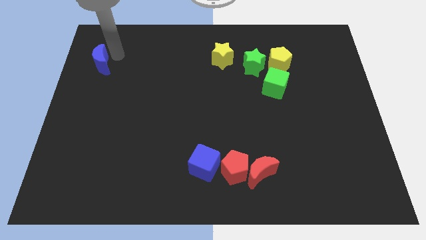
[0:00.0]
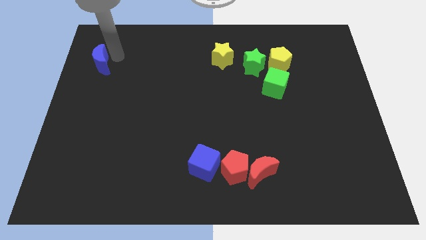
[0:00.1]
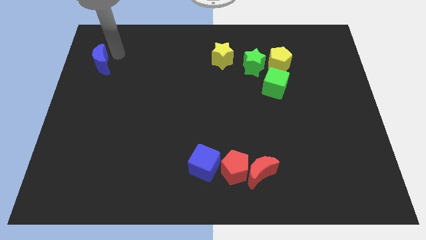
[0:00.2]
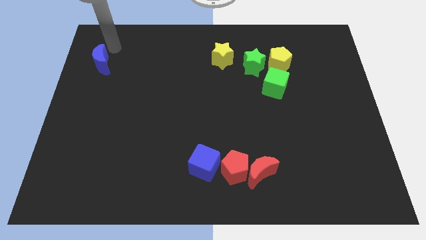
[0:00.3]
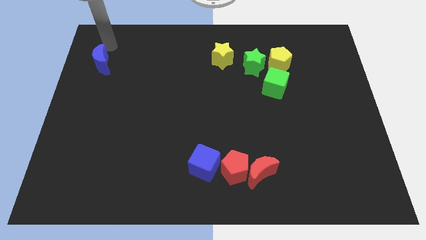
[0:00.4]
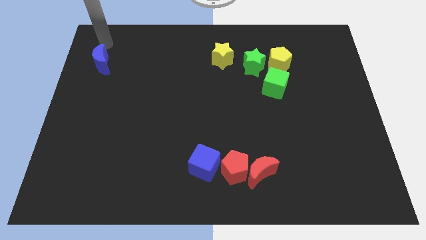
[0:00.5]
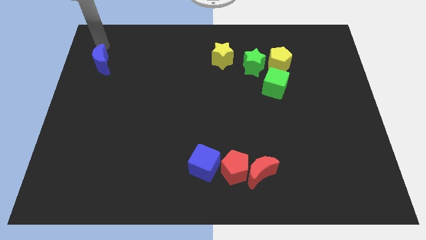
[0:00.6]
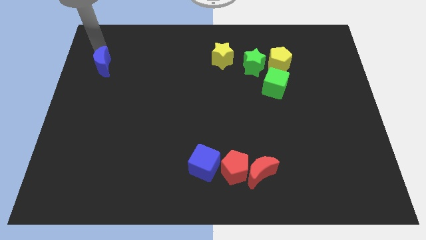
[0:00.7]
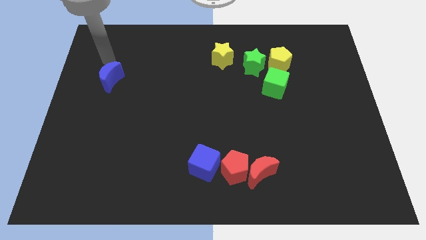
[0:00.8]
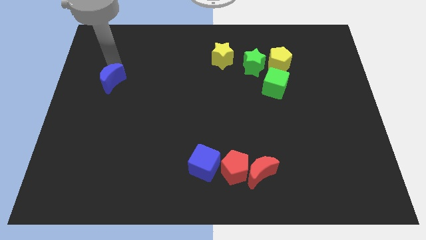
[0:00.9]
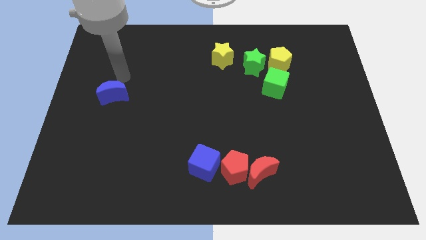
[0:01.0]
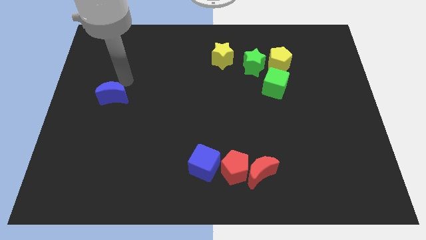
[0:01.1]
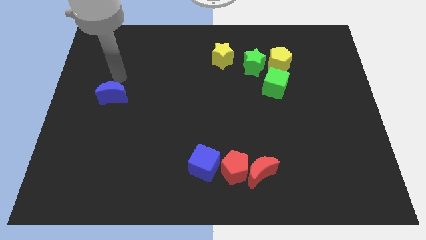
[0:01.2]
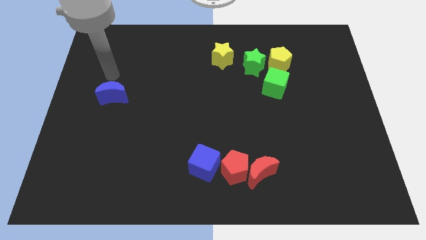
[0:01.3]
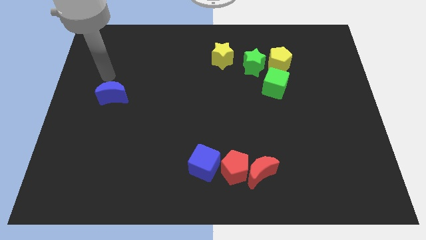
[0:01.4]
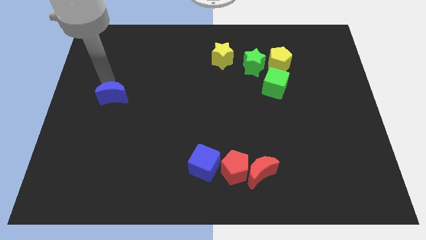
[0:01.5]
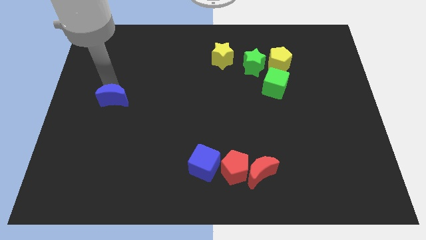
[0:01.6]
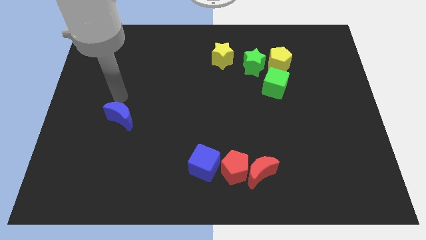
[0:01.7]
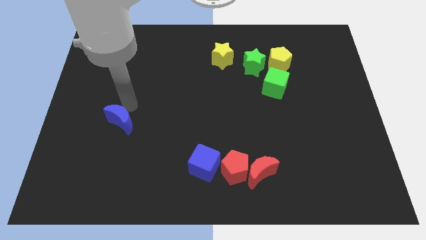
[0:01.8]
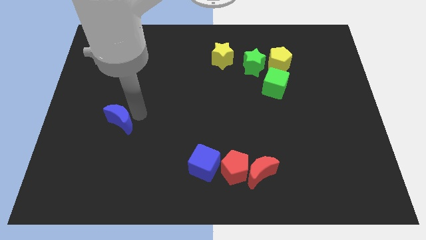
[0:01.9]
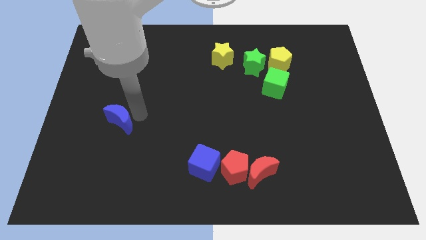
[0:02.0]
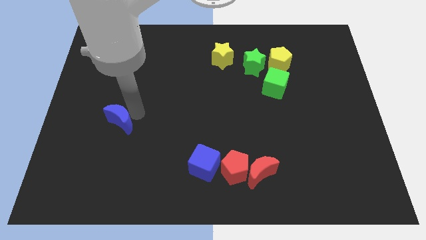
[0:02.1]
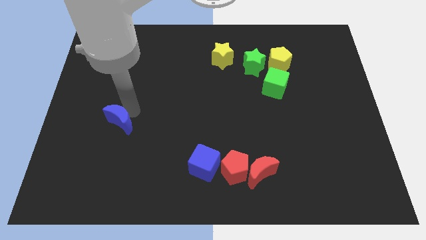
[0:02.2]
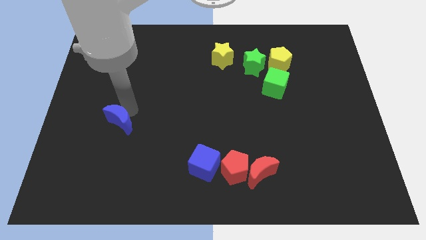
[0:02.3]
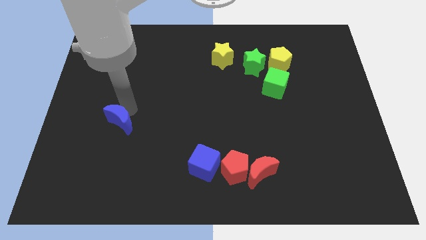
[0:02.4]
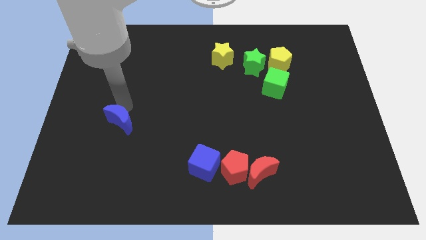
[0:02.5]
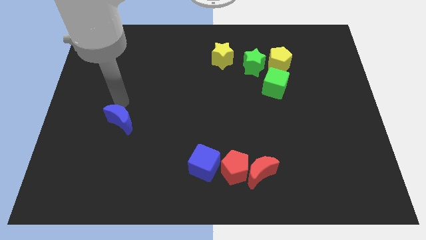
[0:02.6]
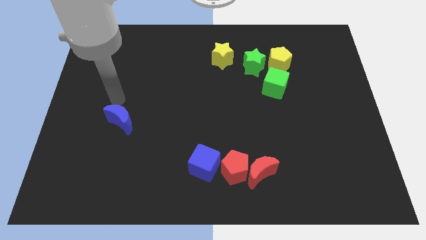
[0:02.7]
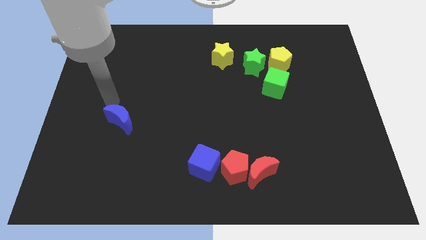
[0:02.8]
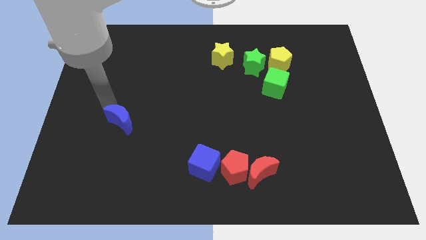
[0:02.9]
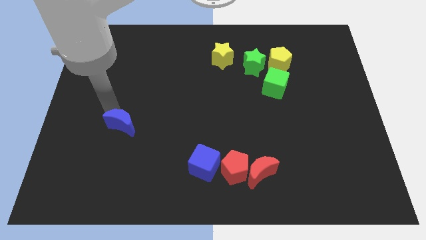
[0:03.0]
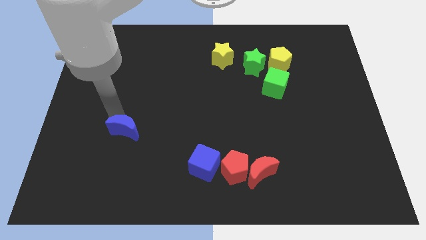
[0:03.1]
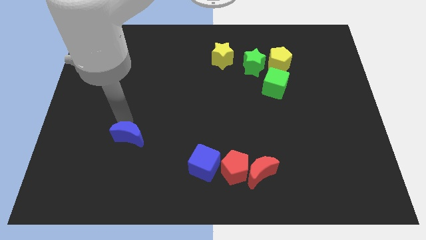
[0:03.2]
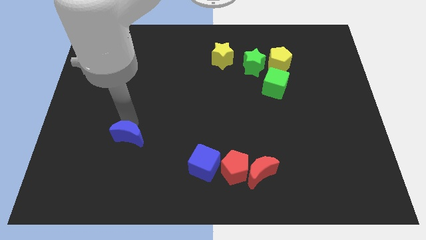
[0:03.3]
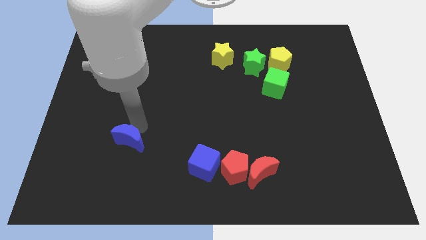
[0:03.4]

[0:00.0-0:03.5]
drag blue crescent diagonally below

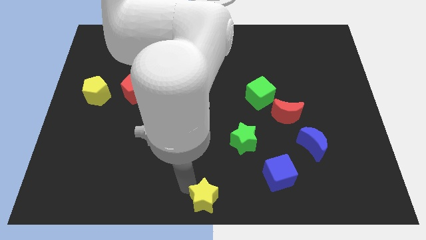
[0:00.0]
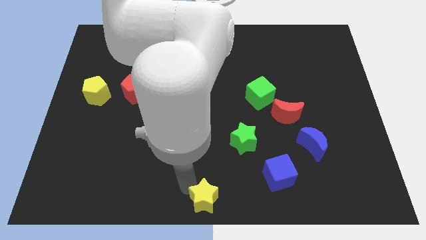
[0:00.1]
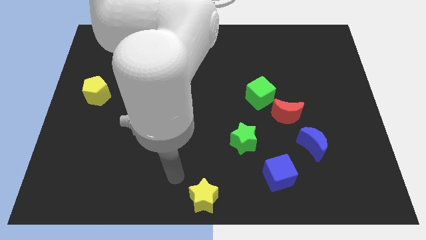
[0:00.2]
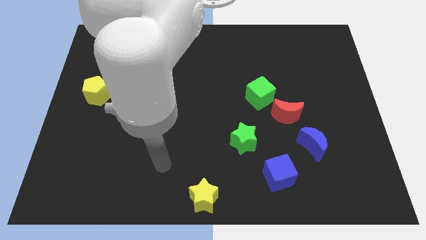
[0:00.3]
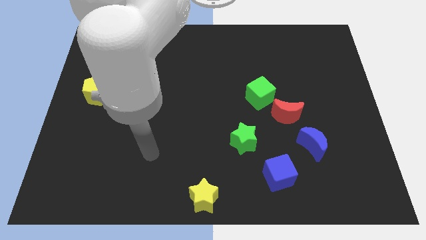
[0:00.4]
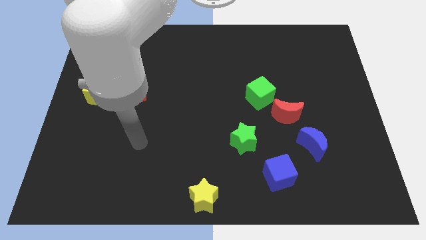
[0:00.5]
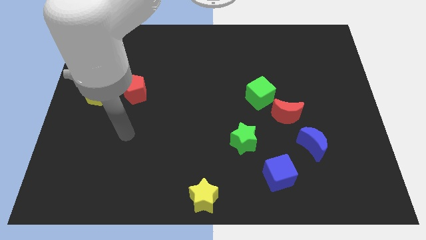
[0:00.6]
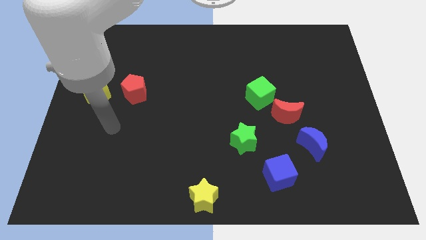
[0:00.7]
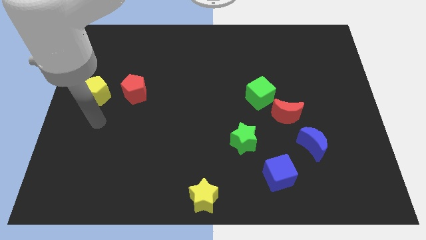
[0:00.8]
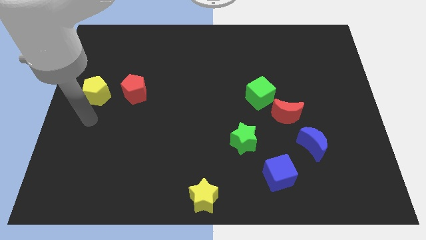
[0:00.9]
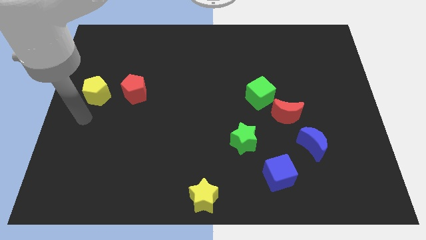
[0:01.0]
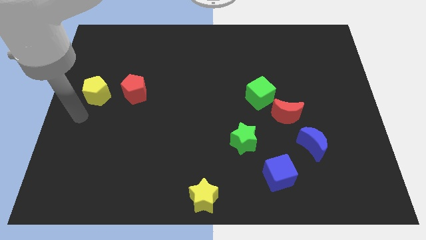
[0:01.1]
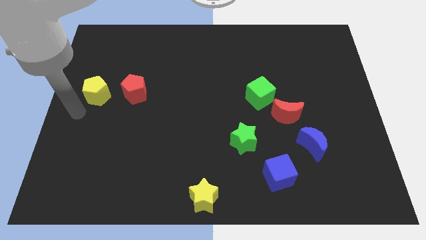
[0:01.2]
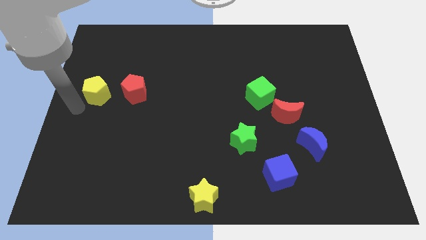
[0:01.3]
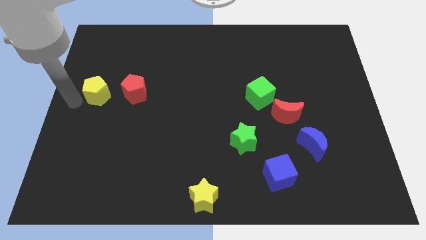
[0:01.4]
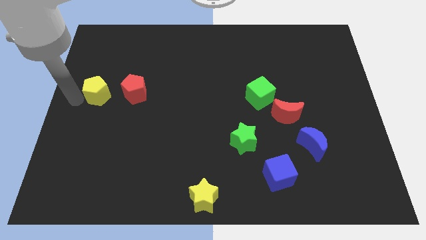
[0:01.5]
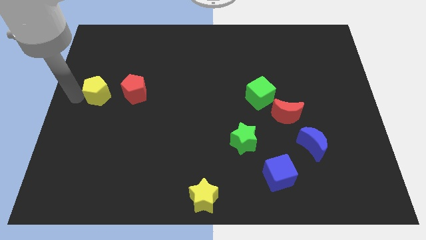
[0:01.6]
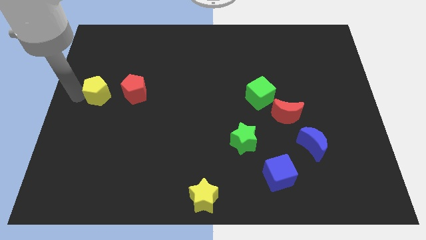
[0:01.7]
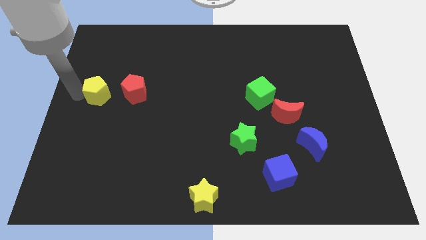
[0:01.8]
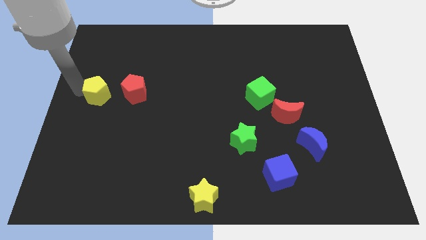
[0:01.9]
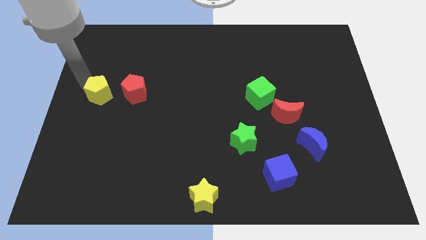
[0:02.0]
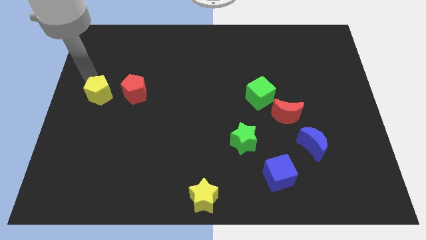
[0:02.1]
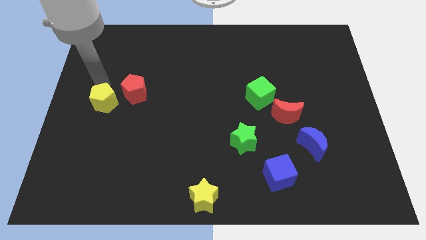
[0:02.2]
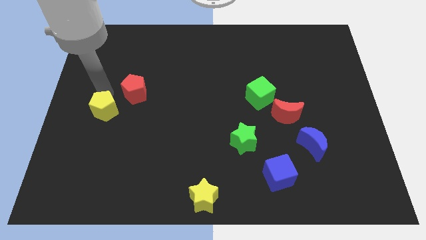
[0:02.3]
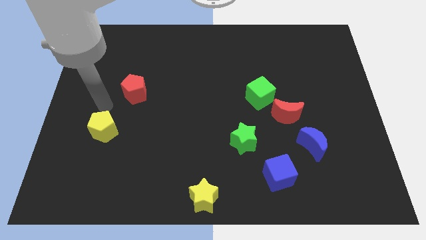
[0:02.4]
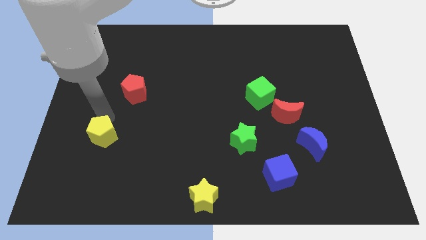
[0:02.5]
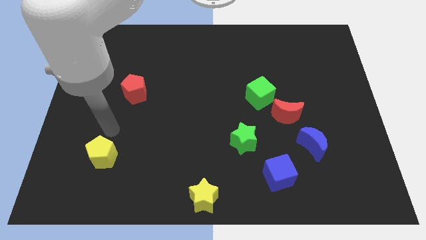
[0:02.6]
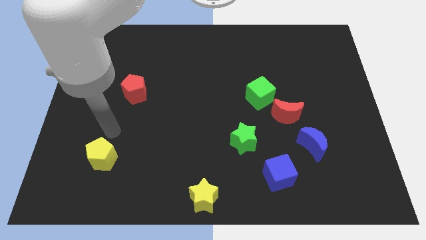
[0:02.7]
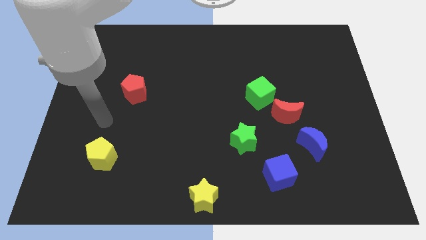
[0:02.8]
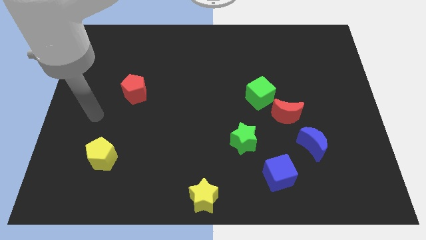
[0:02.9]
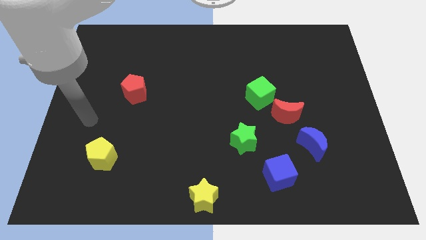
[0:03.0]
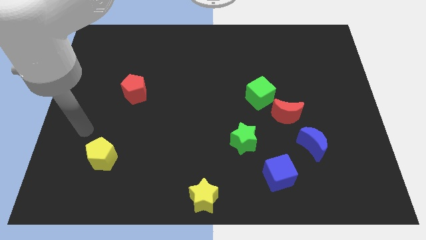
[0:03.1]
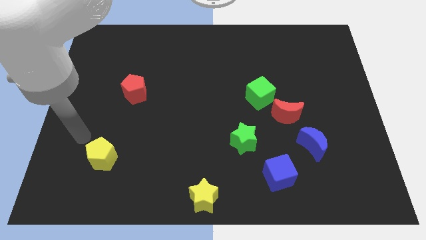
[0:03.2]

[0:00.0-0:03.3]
move the yellow pentagon to the bottom side of the board

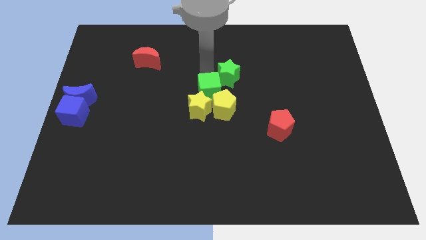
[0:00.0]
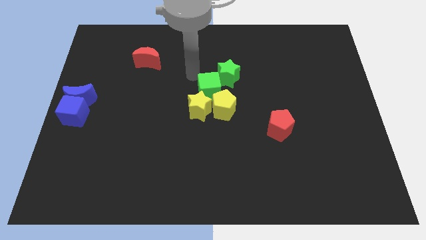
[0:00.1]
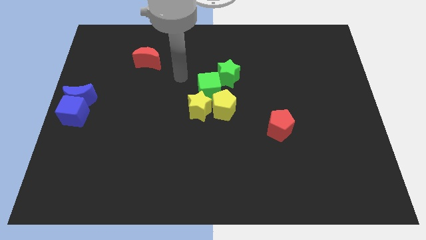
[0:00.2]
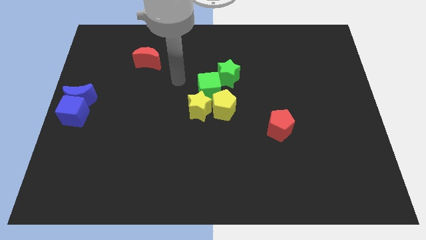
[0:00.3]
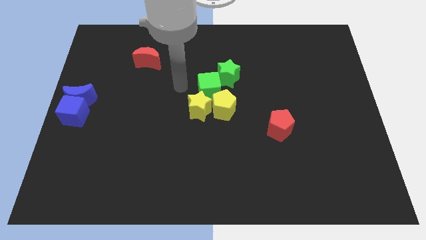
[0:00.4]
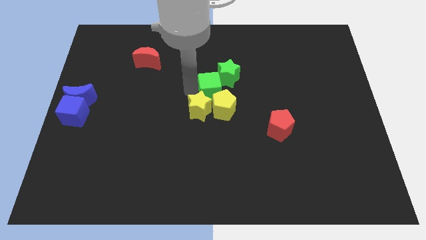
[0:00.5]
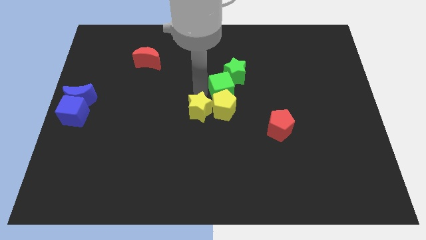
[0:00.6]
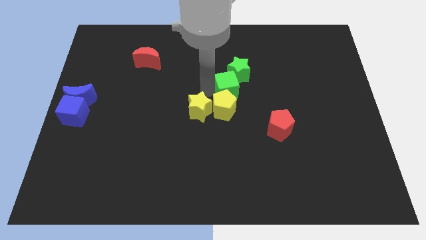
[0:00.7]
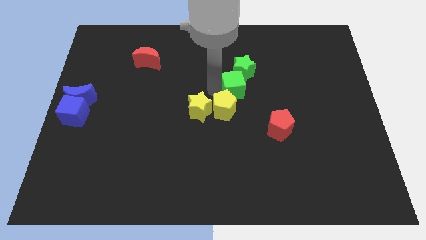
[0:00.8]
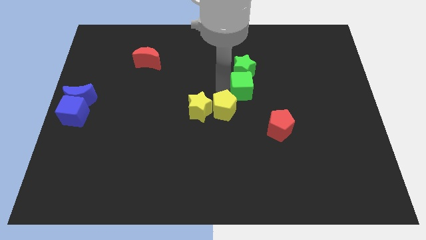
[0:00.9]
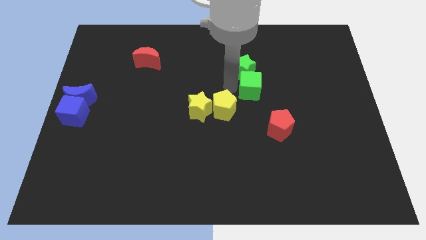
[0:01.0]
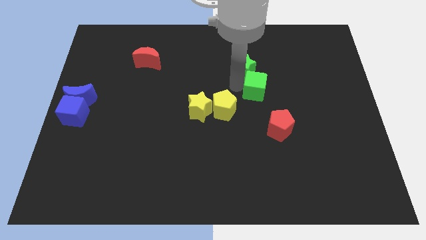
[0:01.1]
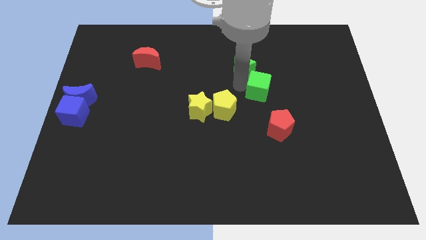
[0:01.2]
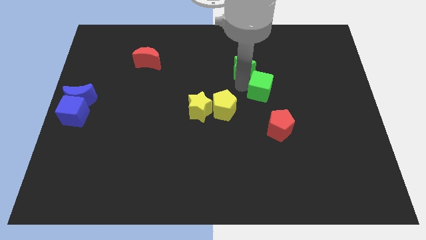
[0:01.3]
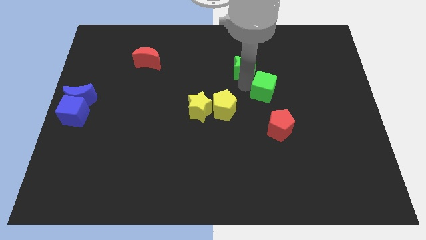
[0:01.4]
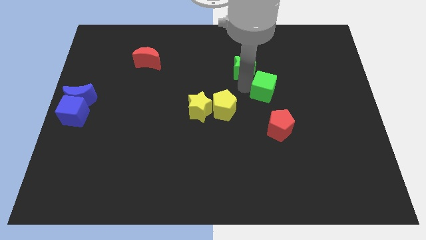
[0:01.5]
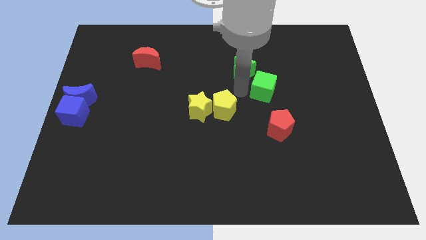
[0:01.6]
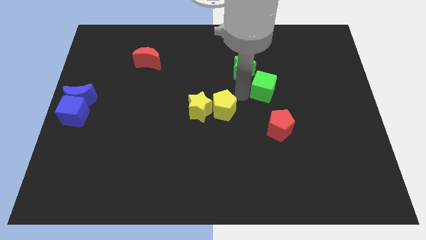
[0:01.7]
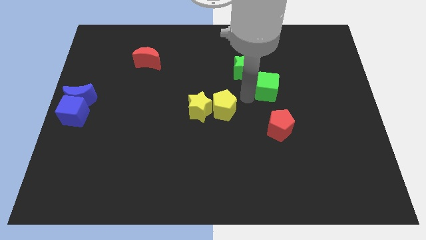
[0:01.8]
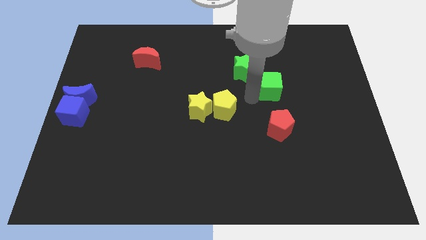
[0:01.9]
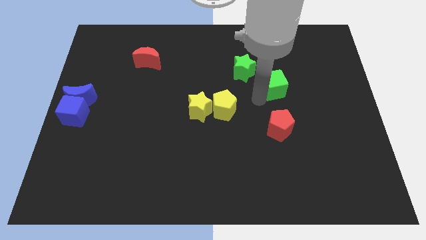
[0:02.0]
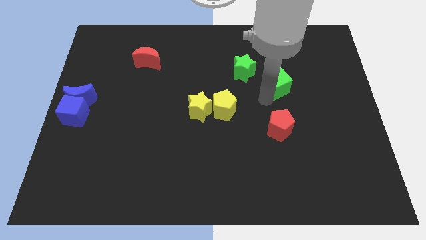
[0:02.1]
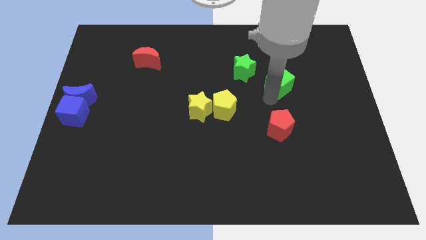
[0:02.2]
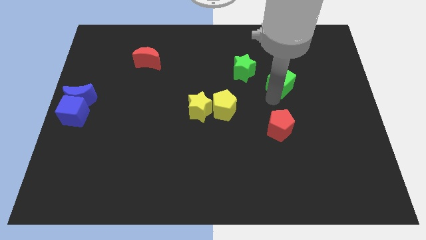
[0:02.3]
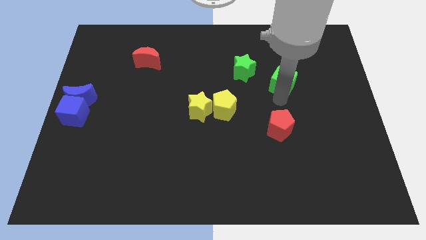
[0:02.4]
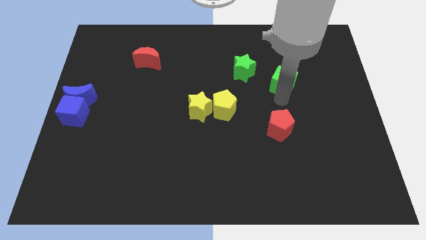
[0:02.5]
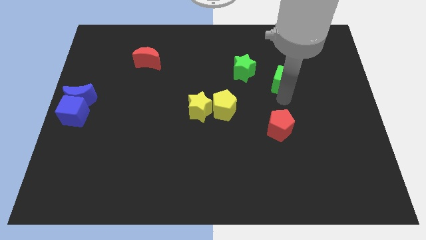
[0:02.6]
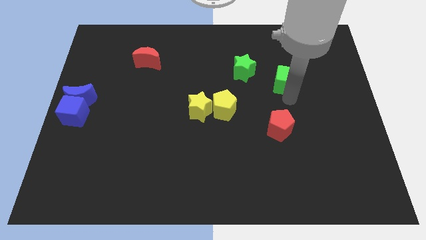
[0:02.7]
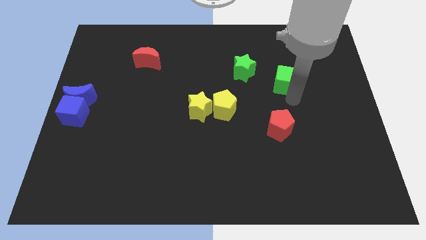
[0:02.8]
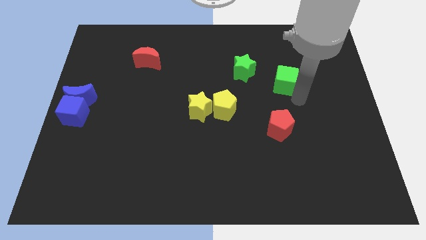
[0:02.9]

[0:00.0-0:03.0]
move the green cube to the top of the red pentagon
